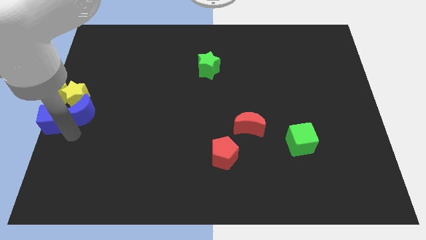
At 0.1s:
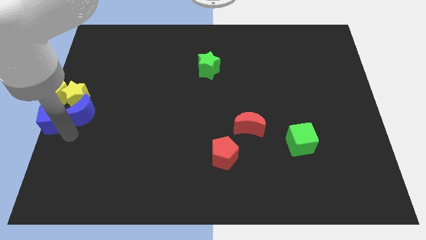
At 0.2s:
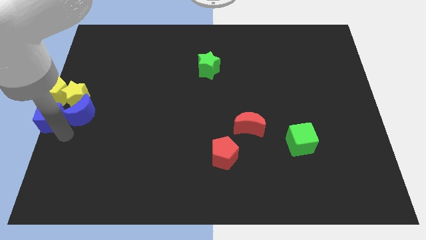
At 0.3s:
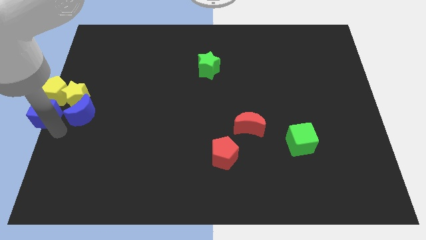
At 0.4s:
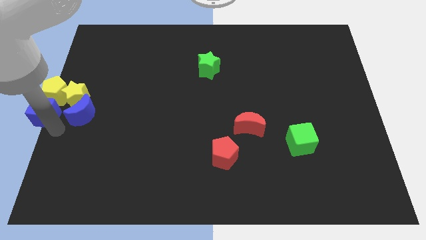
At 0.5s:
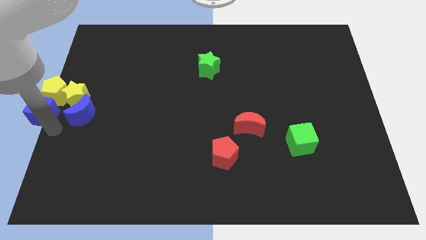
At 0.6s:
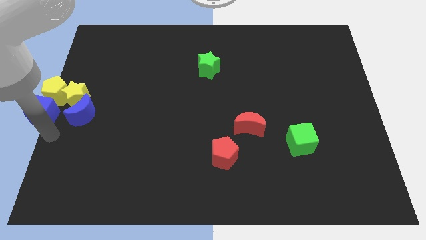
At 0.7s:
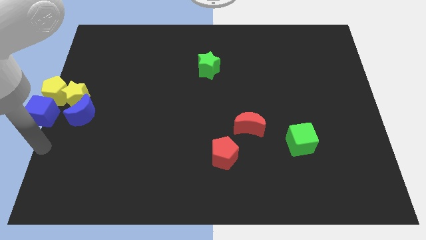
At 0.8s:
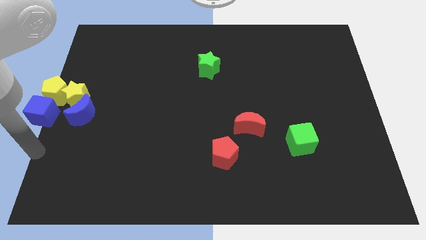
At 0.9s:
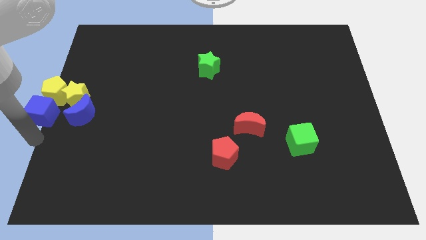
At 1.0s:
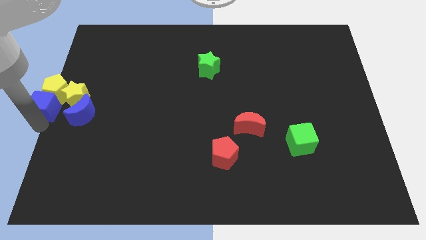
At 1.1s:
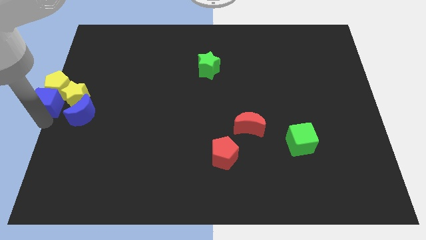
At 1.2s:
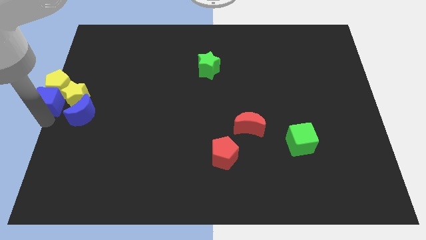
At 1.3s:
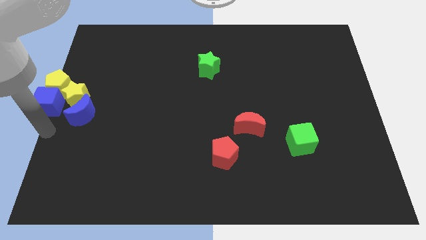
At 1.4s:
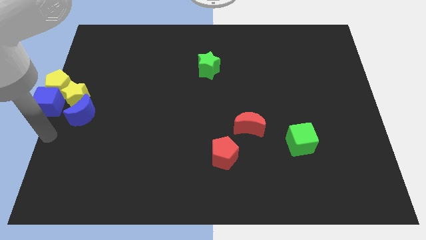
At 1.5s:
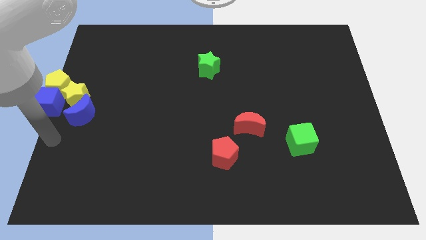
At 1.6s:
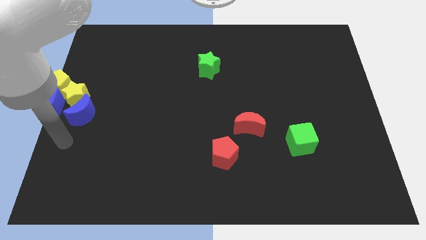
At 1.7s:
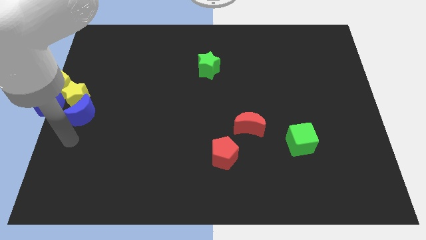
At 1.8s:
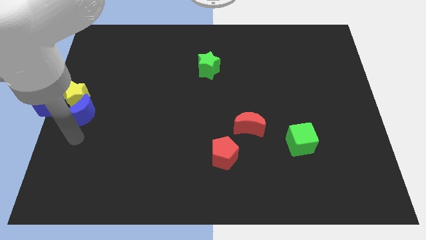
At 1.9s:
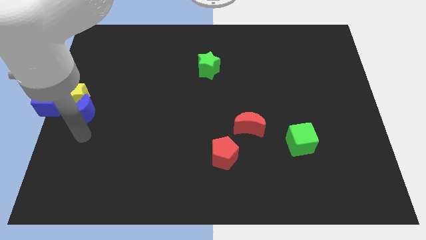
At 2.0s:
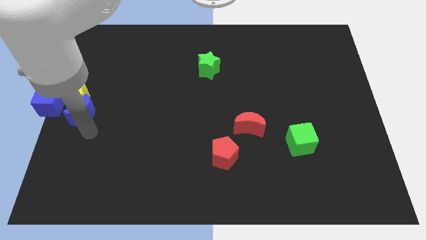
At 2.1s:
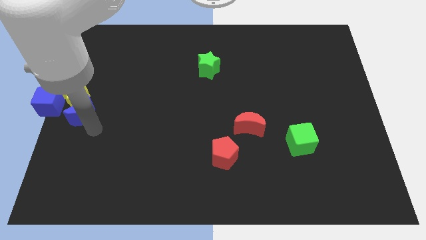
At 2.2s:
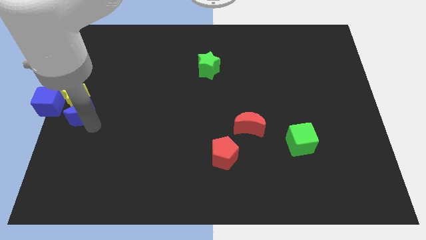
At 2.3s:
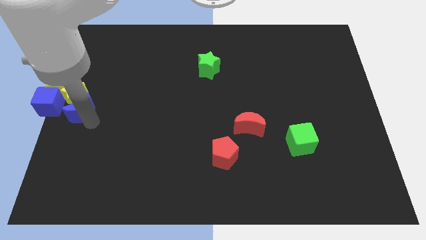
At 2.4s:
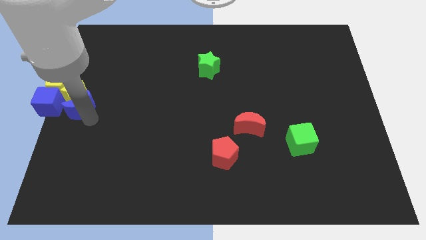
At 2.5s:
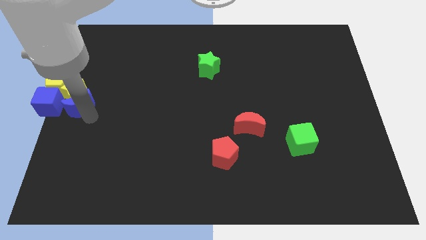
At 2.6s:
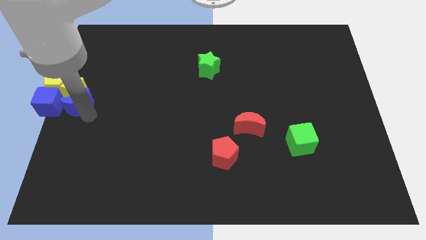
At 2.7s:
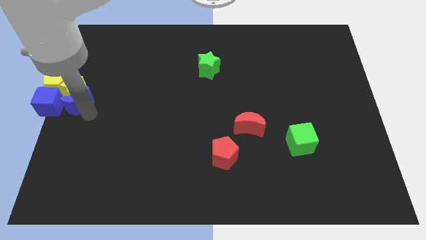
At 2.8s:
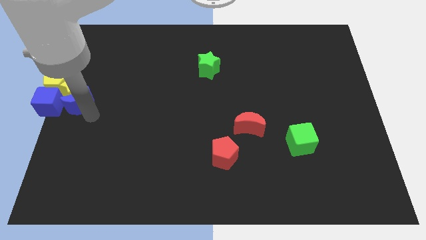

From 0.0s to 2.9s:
push the blue moon into the yellow star

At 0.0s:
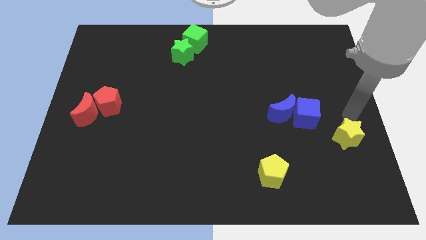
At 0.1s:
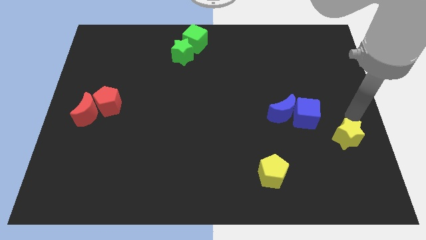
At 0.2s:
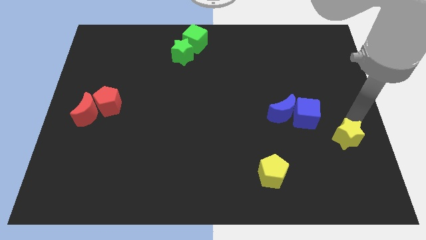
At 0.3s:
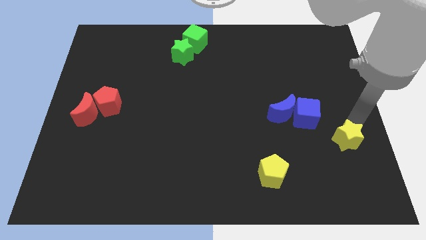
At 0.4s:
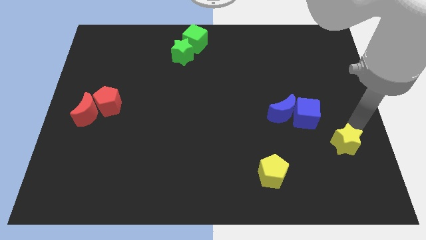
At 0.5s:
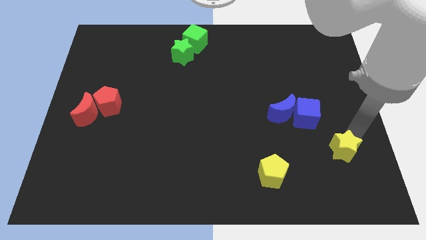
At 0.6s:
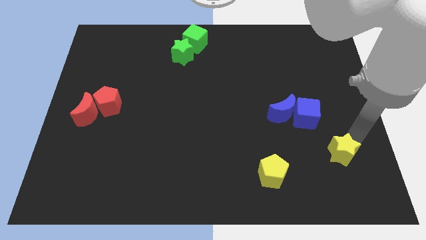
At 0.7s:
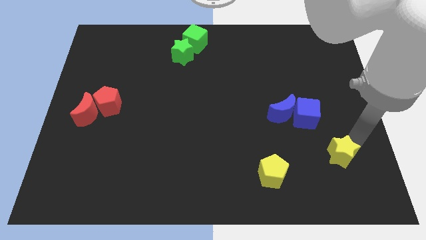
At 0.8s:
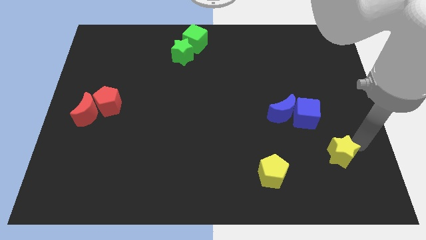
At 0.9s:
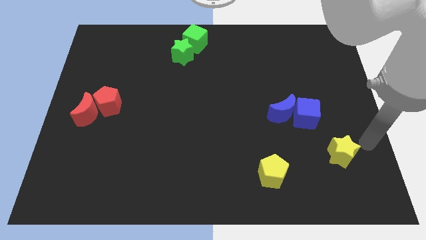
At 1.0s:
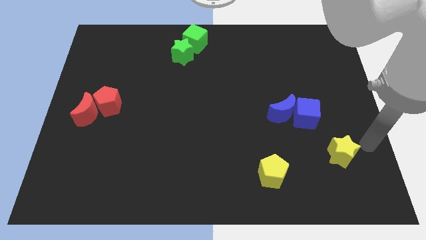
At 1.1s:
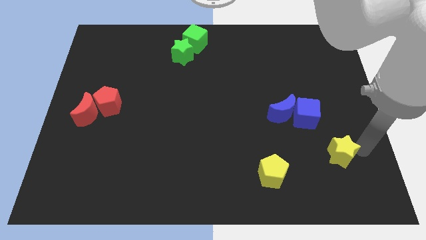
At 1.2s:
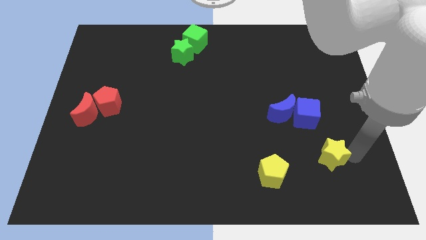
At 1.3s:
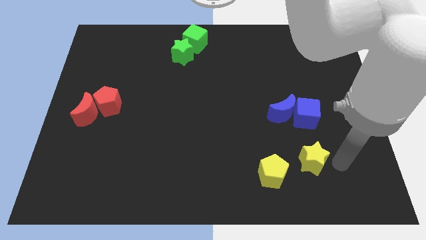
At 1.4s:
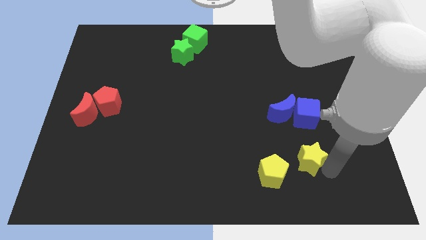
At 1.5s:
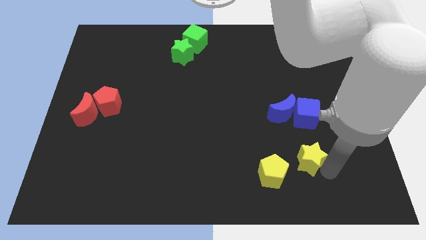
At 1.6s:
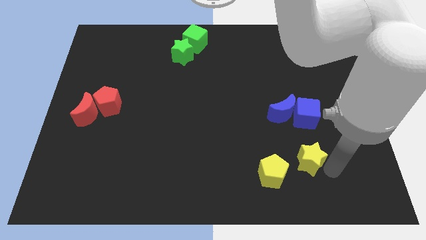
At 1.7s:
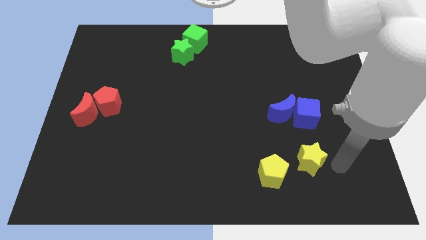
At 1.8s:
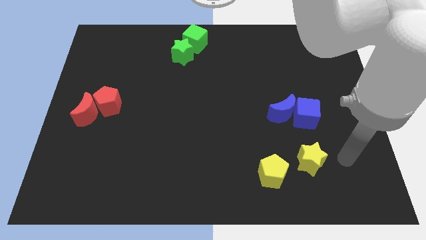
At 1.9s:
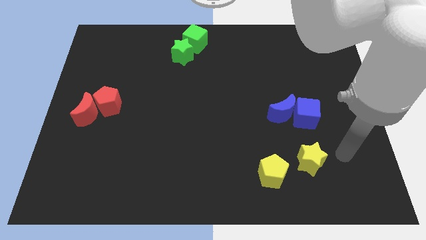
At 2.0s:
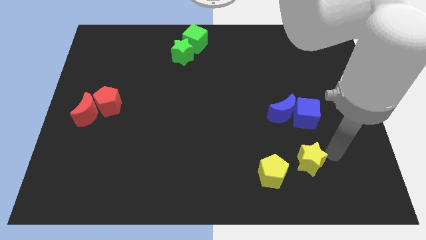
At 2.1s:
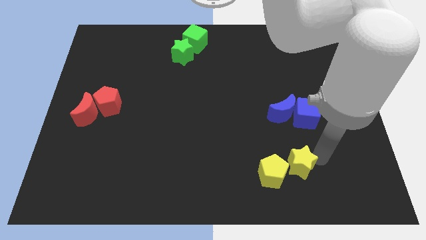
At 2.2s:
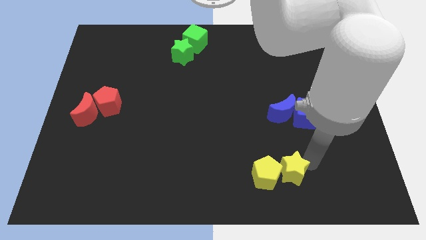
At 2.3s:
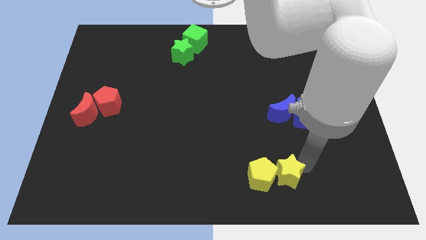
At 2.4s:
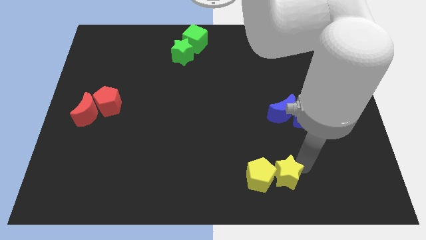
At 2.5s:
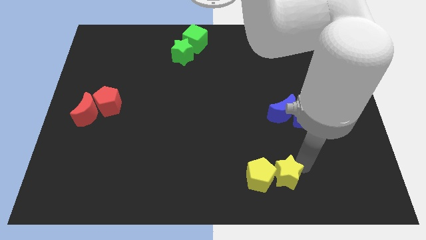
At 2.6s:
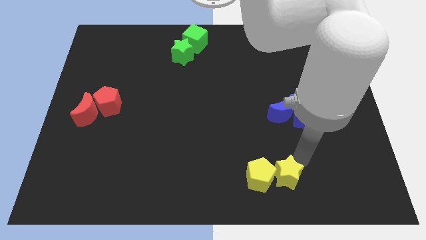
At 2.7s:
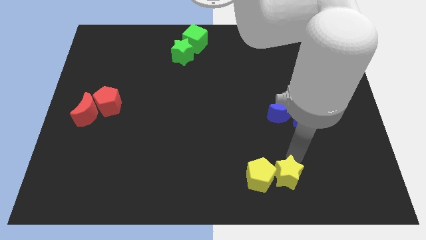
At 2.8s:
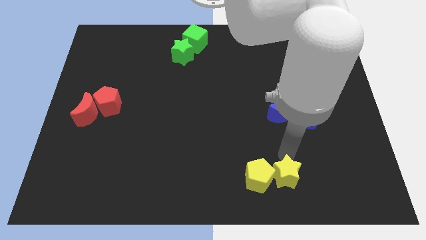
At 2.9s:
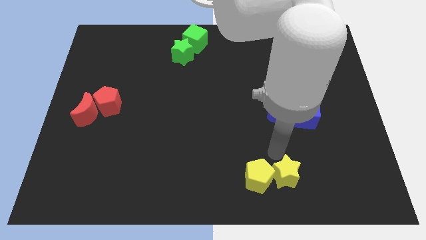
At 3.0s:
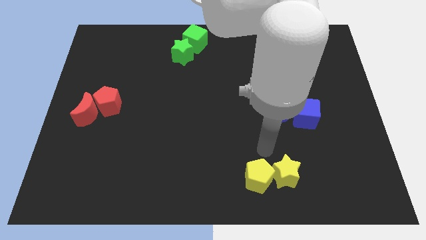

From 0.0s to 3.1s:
place yellow star into yellow pentagon

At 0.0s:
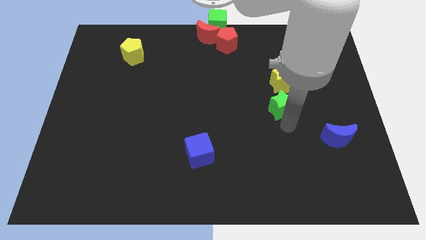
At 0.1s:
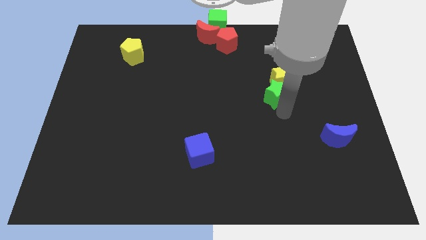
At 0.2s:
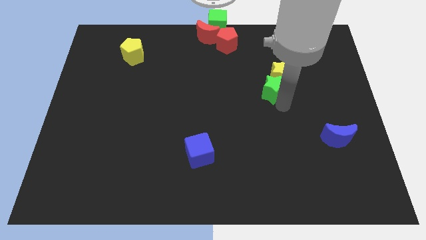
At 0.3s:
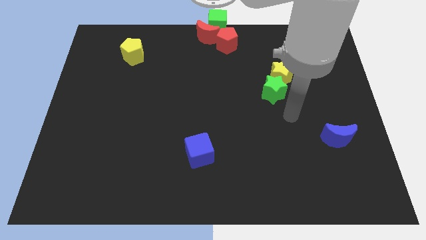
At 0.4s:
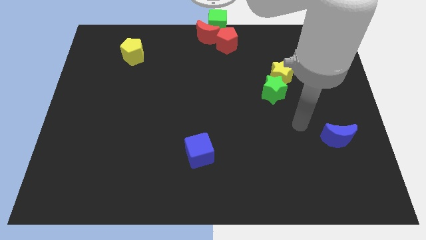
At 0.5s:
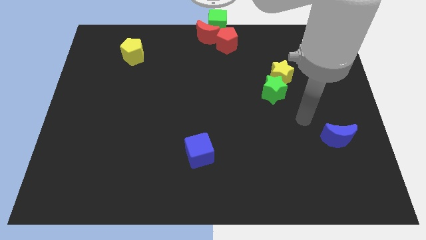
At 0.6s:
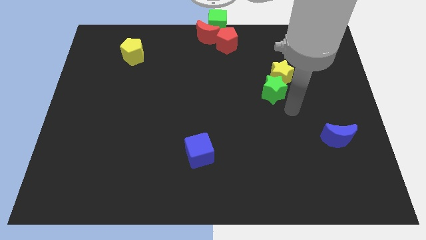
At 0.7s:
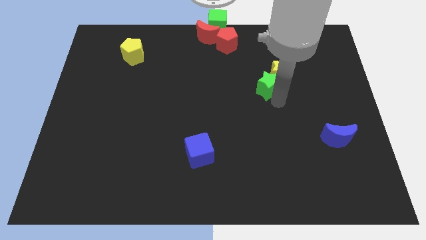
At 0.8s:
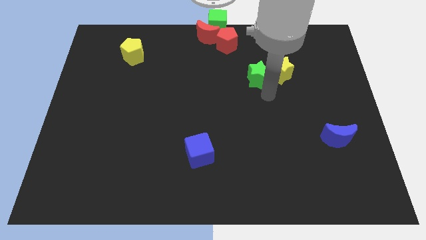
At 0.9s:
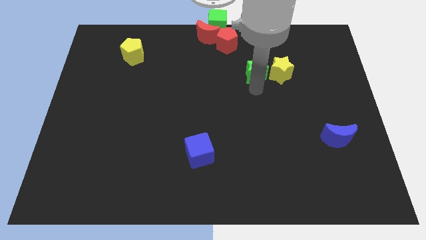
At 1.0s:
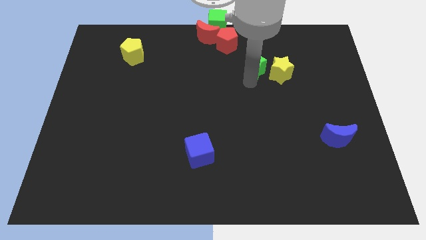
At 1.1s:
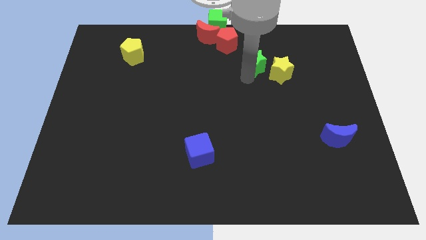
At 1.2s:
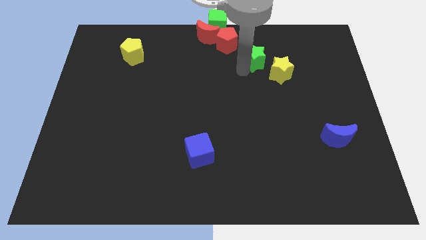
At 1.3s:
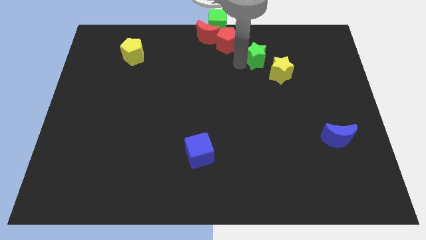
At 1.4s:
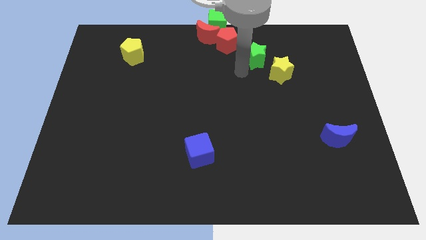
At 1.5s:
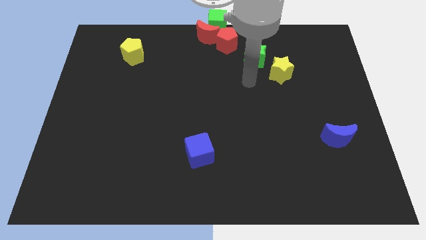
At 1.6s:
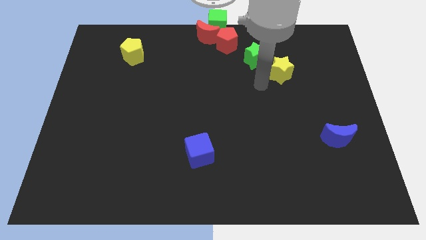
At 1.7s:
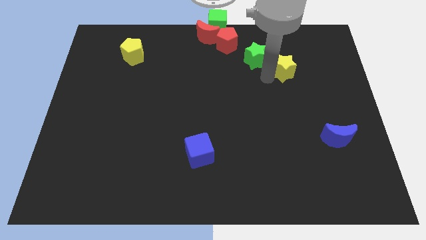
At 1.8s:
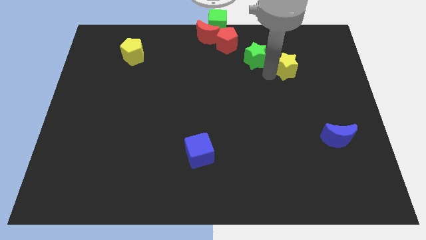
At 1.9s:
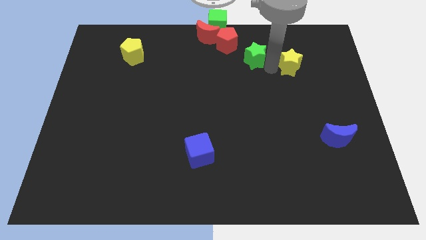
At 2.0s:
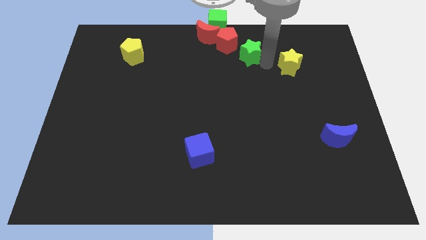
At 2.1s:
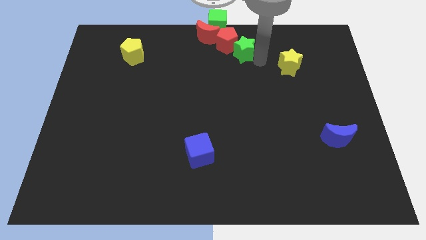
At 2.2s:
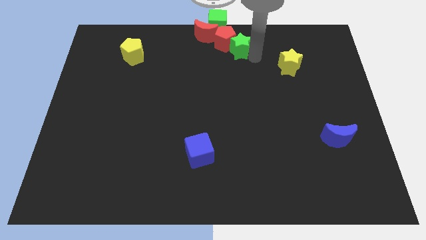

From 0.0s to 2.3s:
separate the green and yellow stars

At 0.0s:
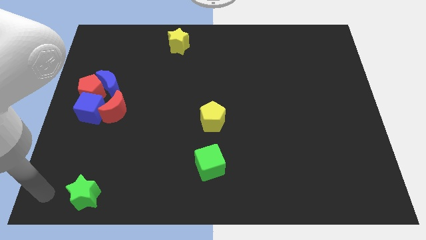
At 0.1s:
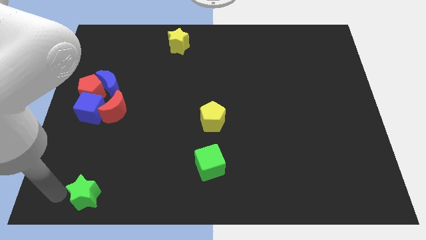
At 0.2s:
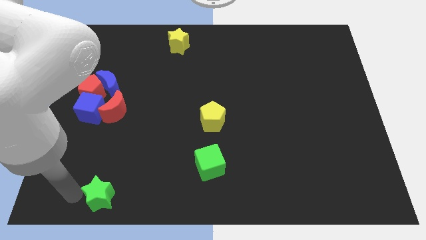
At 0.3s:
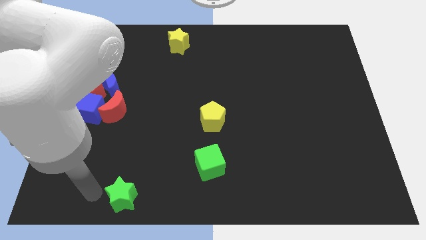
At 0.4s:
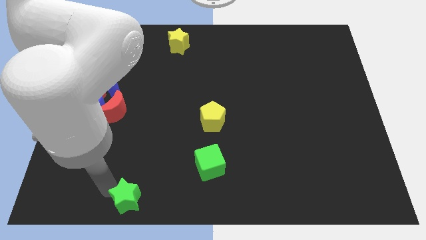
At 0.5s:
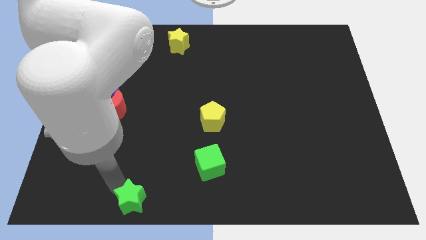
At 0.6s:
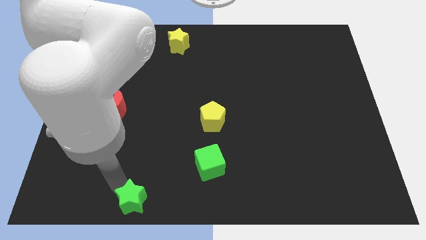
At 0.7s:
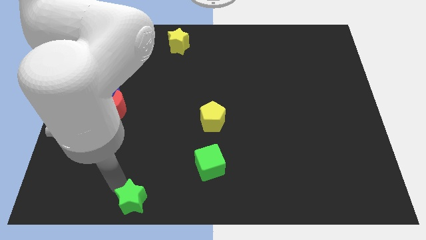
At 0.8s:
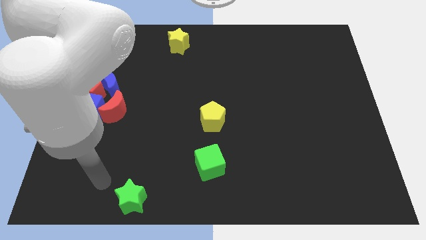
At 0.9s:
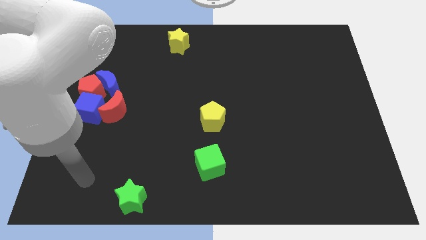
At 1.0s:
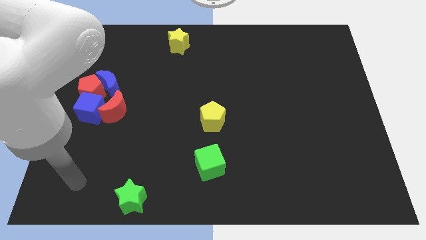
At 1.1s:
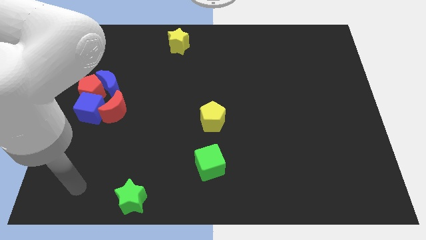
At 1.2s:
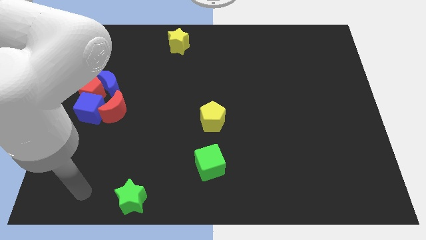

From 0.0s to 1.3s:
slide the green star slightly to the right
